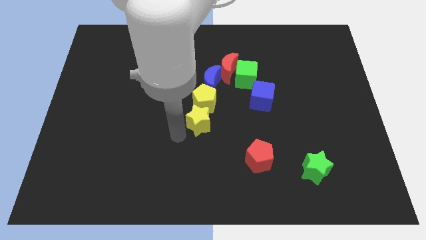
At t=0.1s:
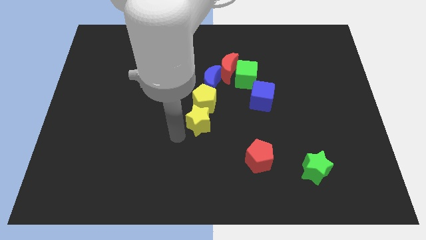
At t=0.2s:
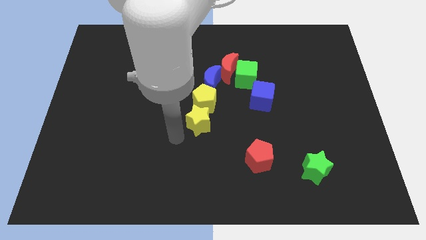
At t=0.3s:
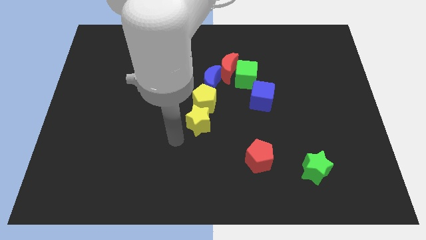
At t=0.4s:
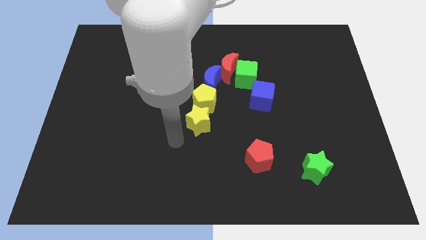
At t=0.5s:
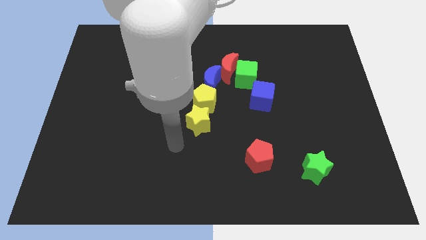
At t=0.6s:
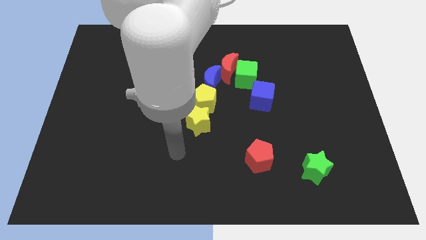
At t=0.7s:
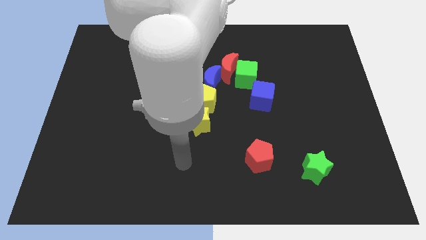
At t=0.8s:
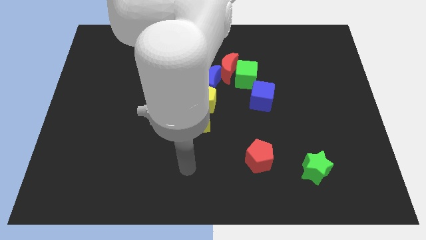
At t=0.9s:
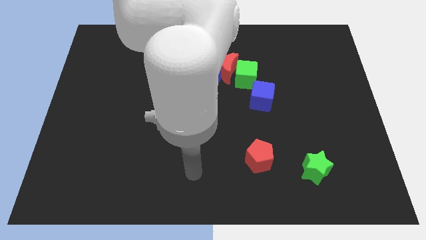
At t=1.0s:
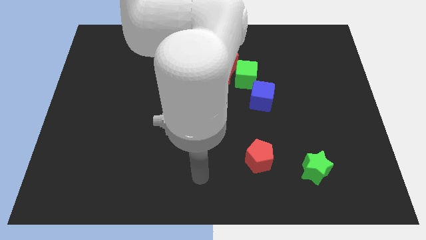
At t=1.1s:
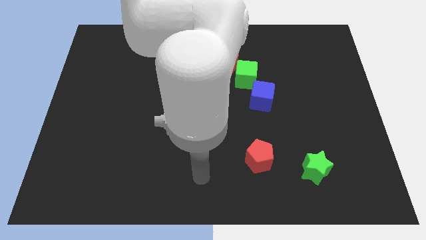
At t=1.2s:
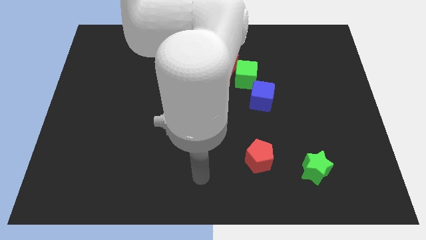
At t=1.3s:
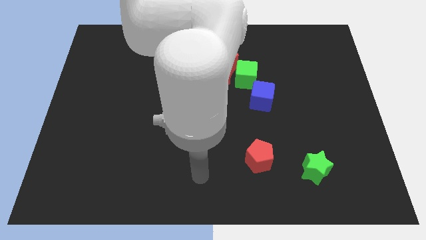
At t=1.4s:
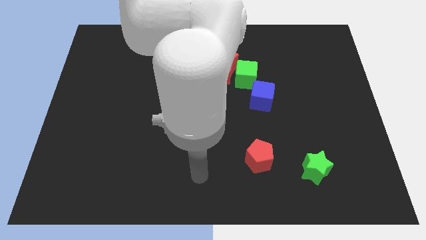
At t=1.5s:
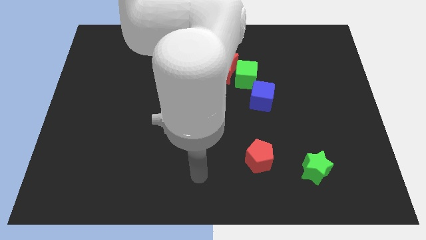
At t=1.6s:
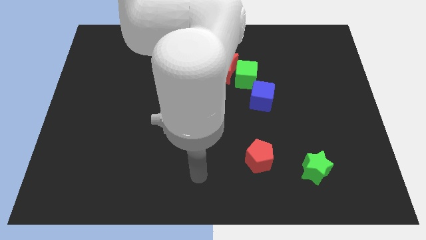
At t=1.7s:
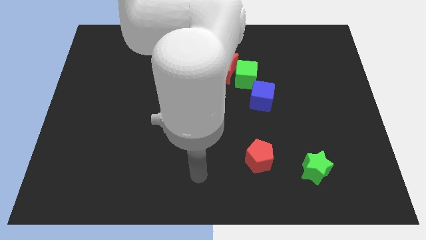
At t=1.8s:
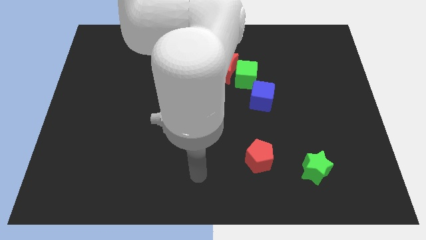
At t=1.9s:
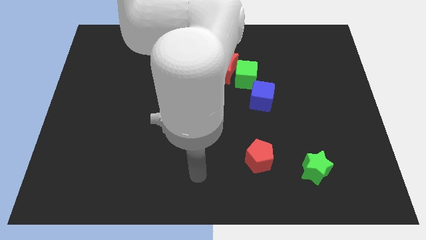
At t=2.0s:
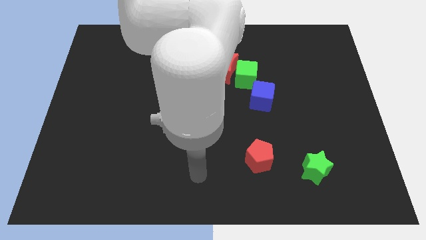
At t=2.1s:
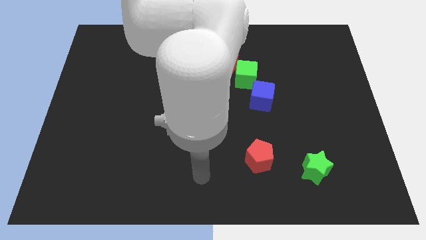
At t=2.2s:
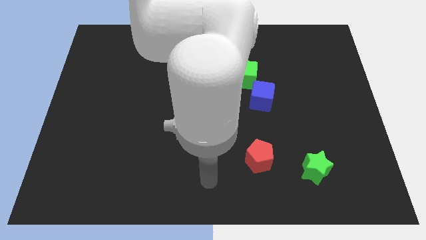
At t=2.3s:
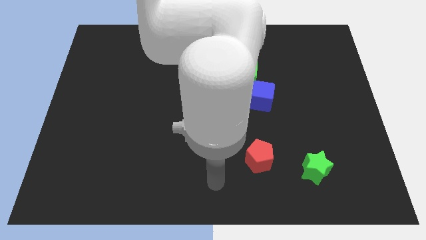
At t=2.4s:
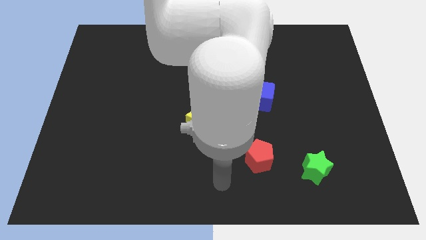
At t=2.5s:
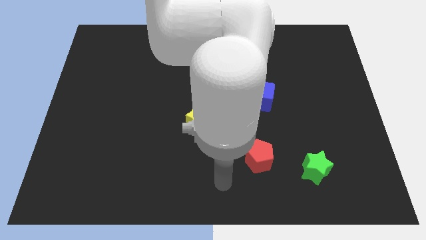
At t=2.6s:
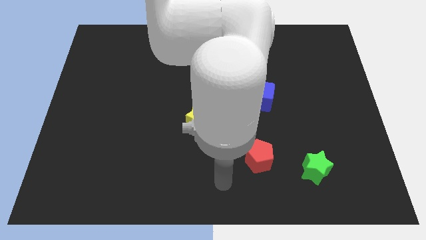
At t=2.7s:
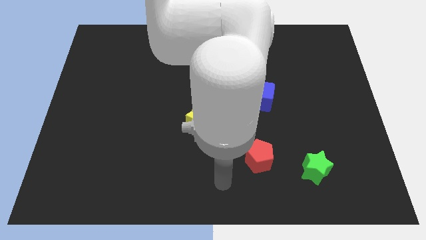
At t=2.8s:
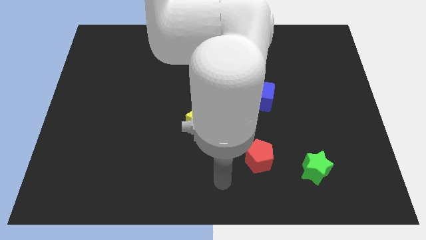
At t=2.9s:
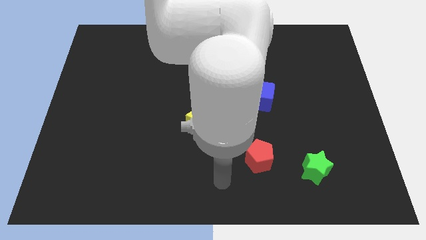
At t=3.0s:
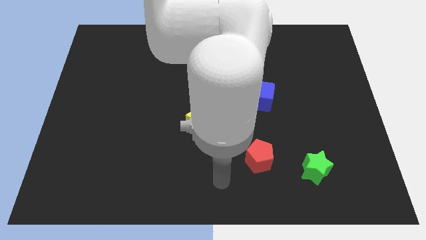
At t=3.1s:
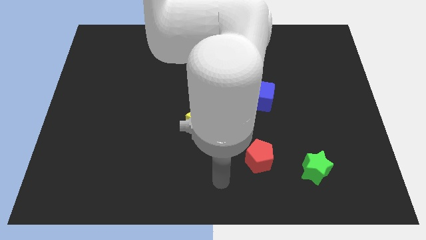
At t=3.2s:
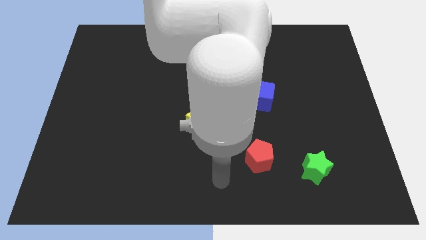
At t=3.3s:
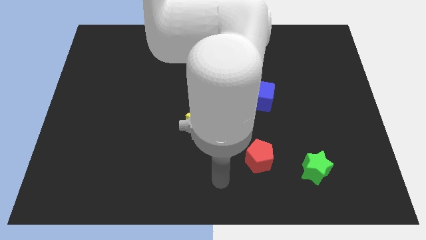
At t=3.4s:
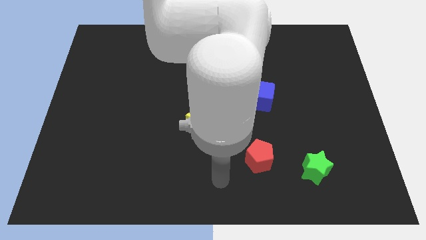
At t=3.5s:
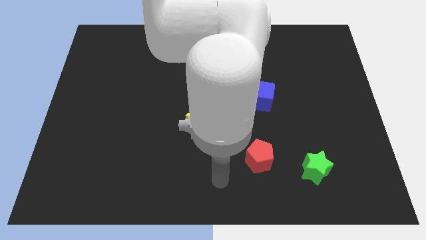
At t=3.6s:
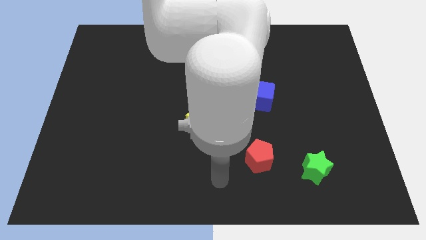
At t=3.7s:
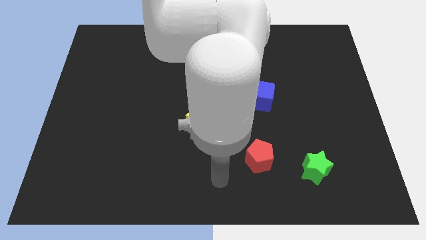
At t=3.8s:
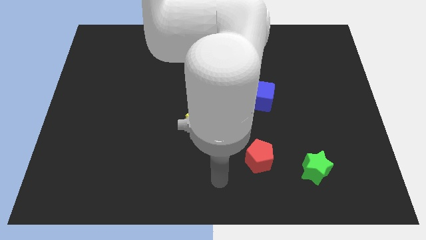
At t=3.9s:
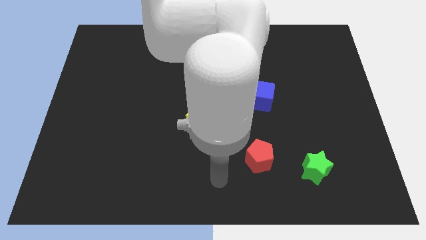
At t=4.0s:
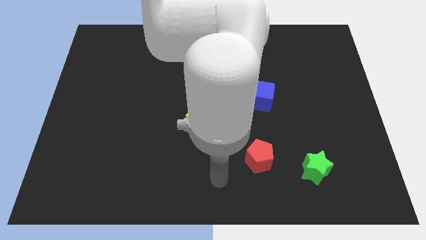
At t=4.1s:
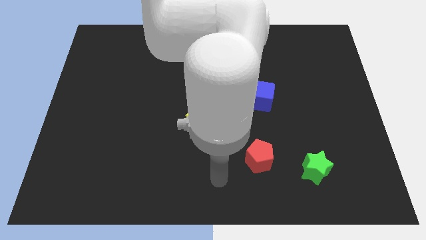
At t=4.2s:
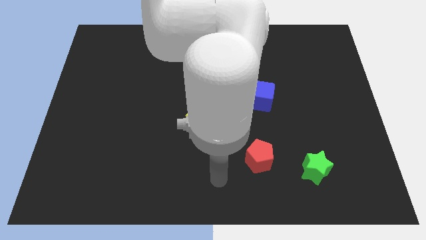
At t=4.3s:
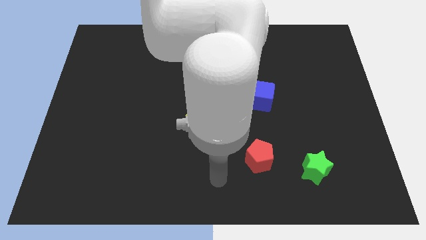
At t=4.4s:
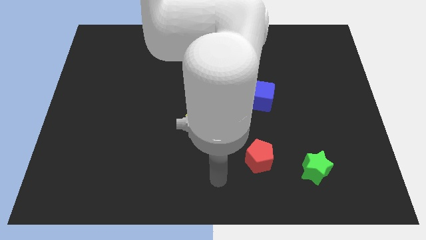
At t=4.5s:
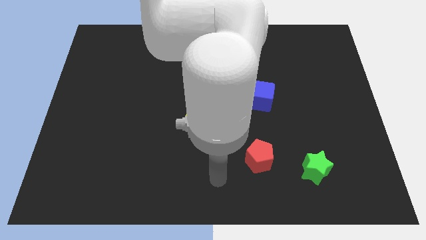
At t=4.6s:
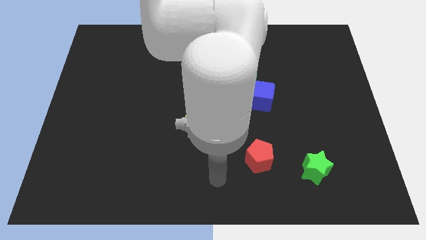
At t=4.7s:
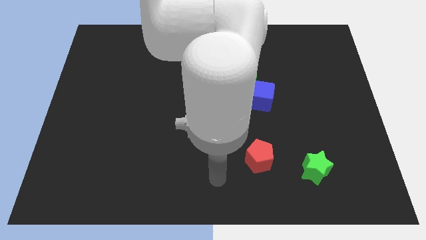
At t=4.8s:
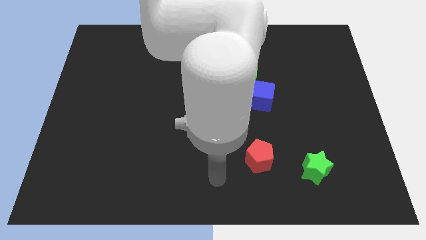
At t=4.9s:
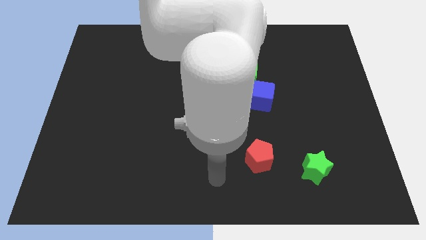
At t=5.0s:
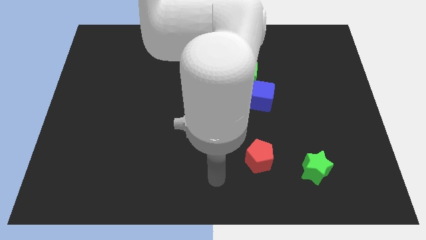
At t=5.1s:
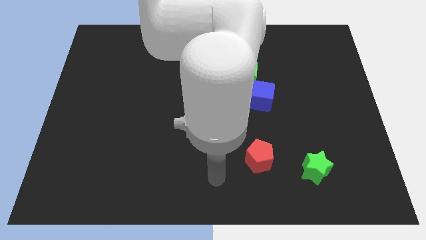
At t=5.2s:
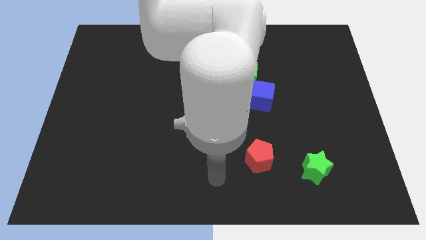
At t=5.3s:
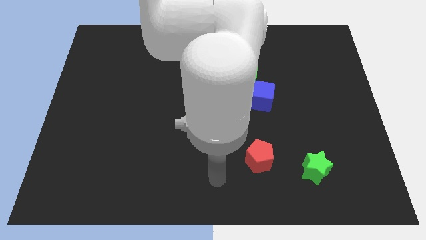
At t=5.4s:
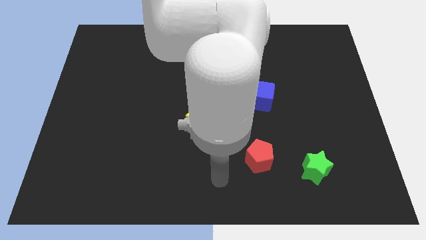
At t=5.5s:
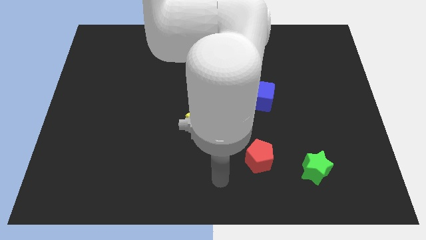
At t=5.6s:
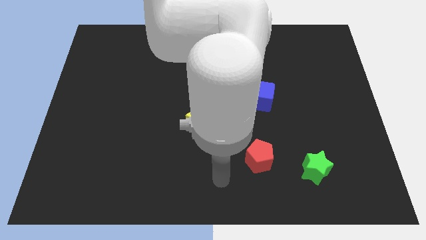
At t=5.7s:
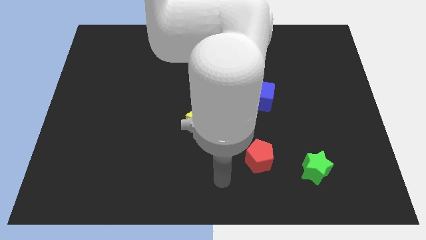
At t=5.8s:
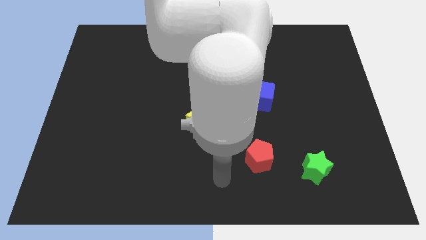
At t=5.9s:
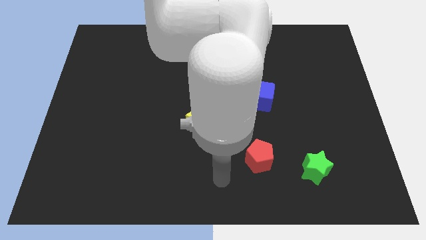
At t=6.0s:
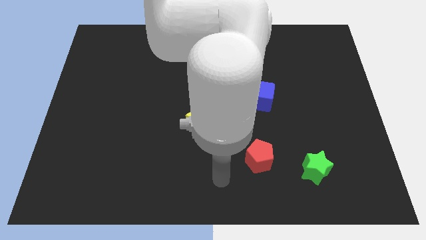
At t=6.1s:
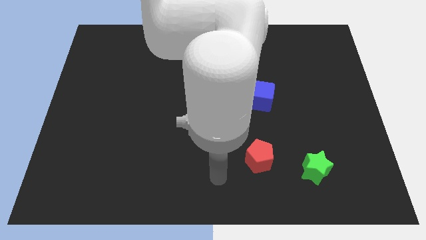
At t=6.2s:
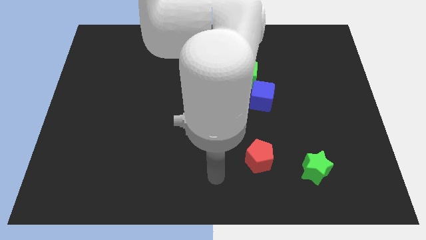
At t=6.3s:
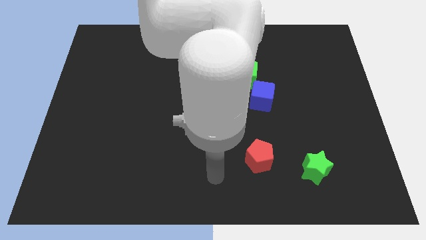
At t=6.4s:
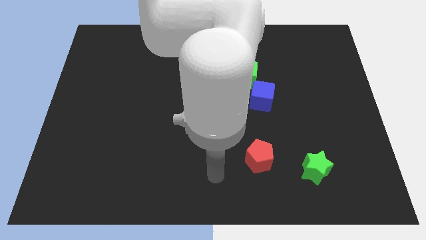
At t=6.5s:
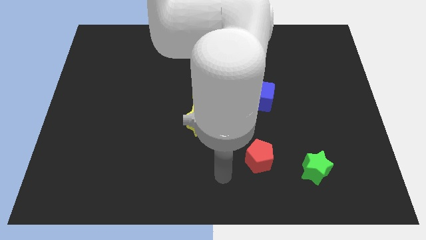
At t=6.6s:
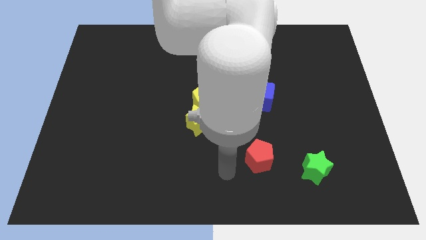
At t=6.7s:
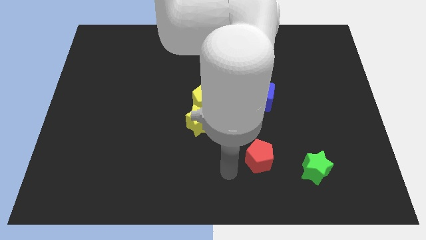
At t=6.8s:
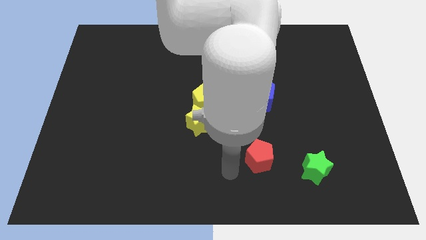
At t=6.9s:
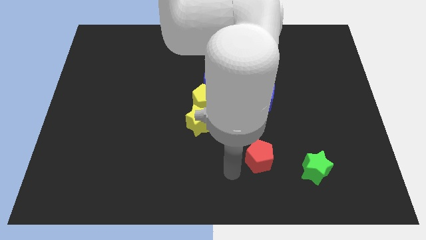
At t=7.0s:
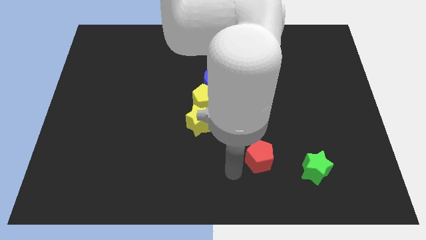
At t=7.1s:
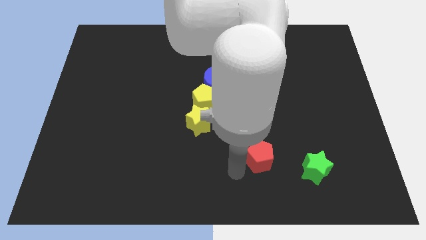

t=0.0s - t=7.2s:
go near red pentagon

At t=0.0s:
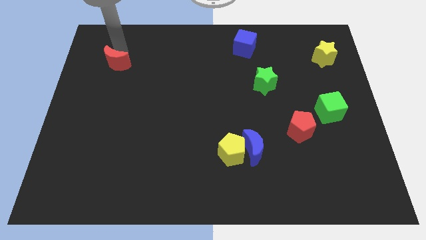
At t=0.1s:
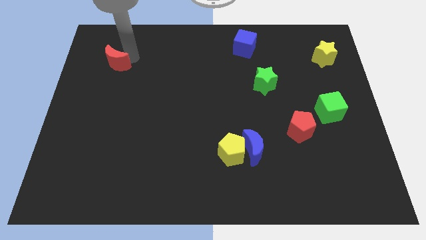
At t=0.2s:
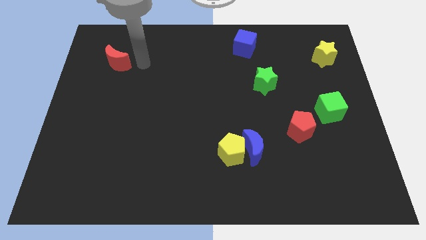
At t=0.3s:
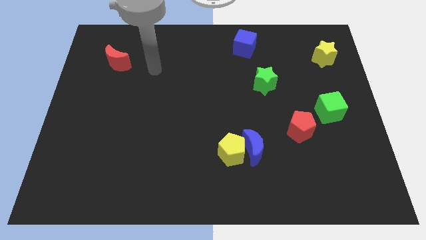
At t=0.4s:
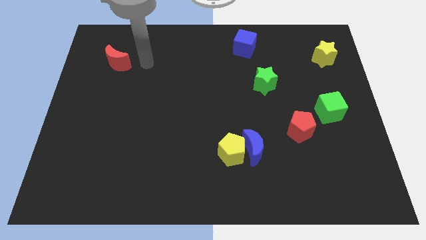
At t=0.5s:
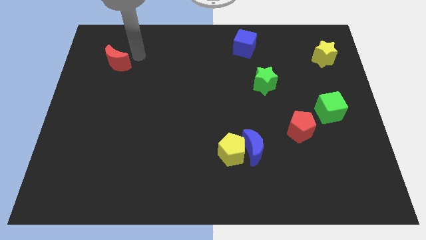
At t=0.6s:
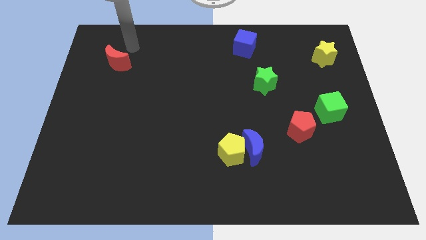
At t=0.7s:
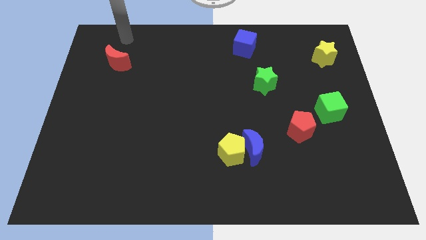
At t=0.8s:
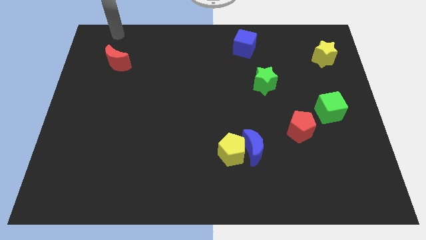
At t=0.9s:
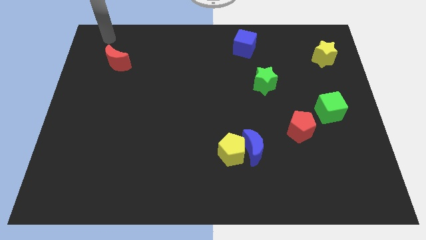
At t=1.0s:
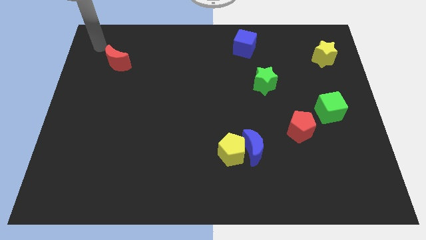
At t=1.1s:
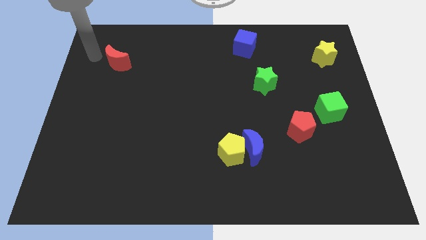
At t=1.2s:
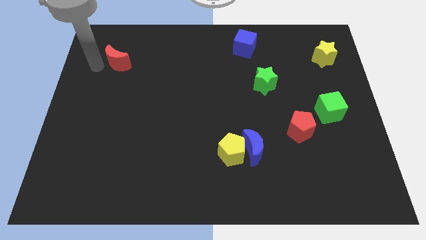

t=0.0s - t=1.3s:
move the arm to the left side of the red crescent

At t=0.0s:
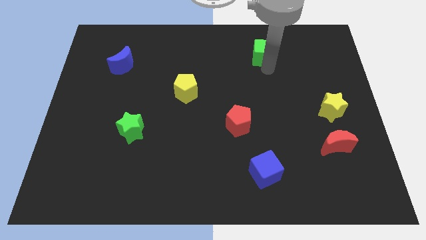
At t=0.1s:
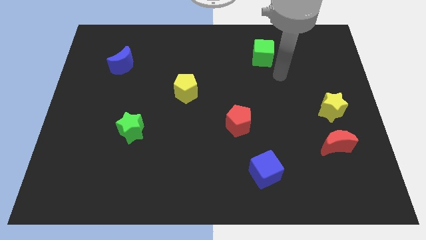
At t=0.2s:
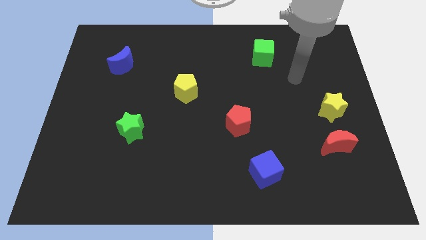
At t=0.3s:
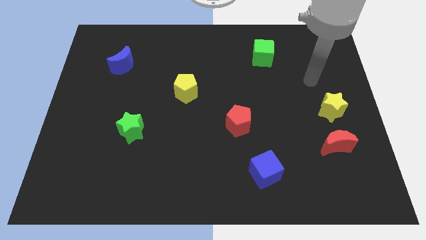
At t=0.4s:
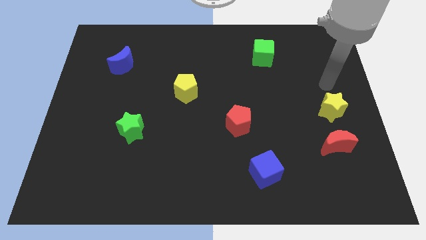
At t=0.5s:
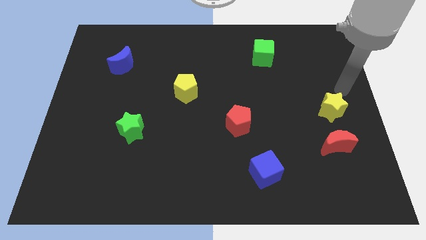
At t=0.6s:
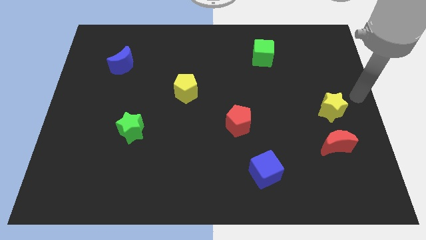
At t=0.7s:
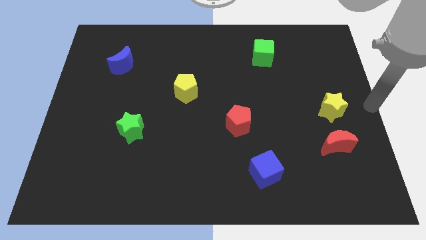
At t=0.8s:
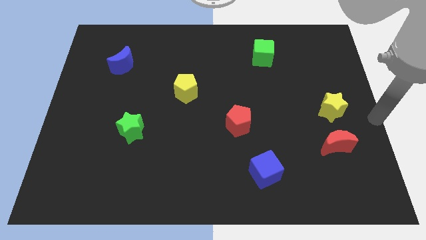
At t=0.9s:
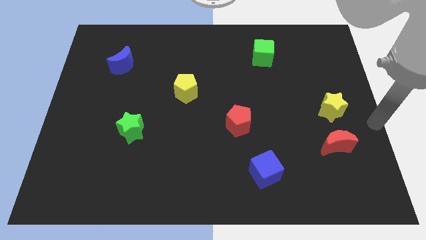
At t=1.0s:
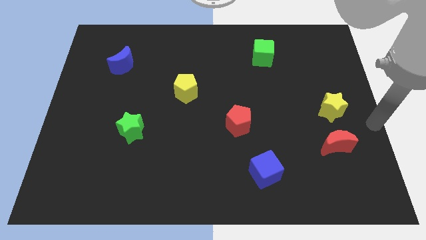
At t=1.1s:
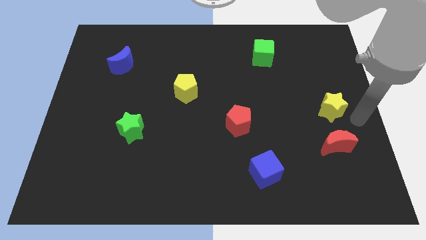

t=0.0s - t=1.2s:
move your arm away from the green cube
